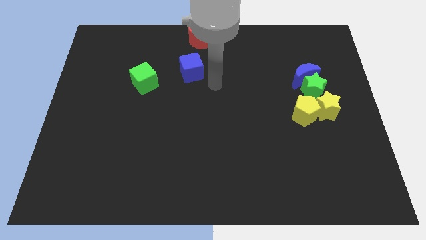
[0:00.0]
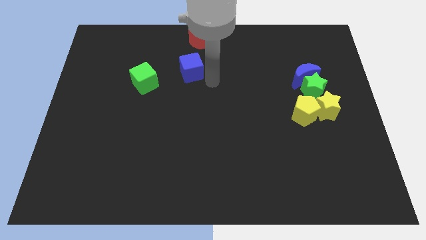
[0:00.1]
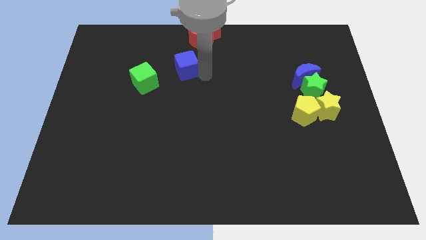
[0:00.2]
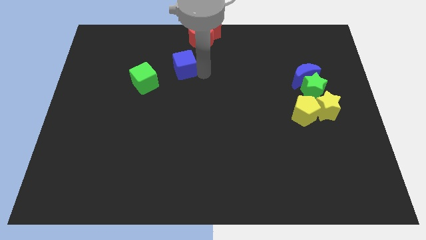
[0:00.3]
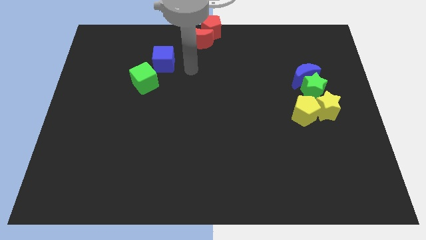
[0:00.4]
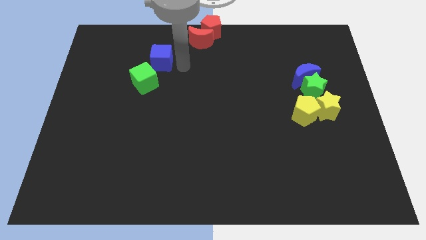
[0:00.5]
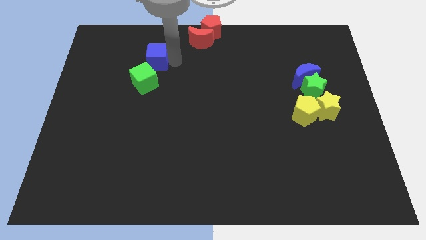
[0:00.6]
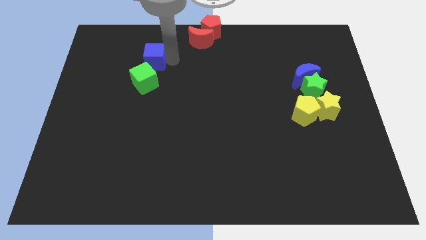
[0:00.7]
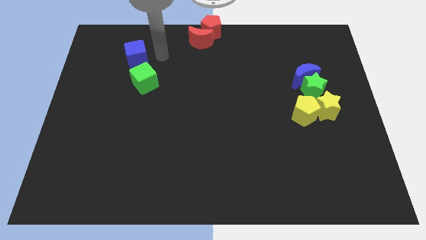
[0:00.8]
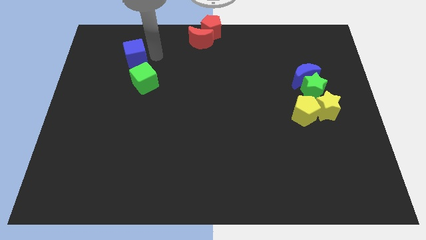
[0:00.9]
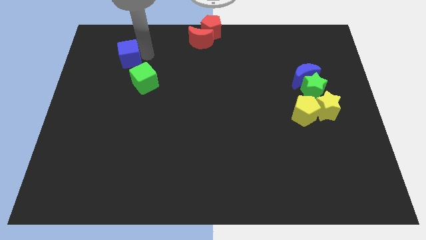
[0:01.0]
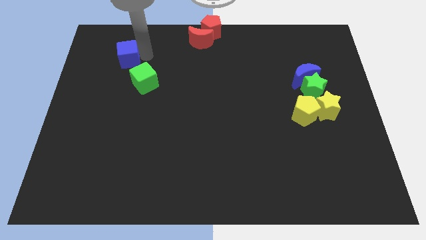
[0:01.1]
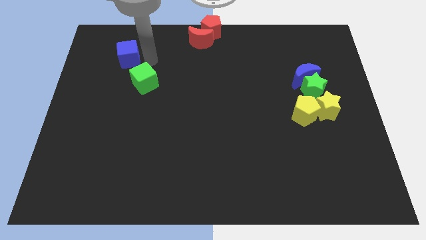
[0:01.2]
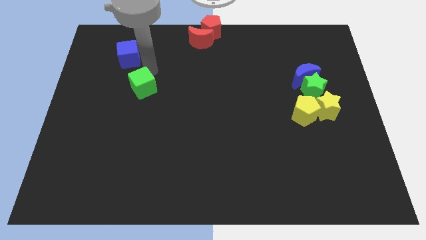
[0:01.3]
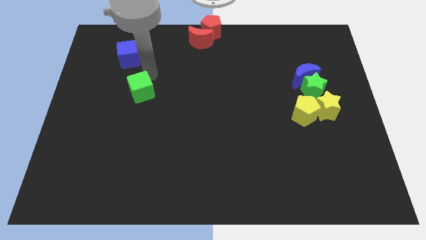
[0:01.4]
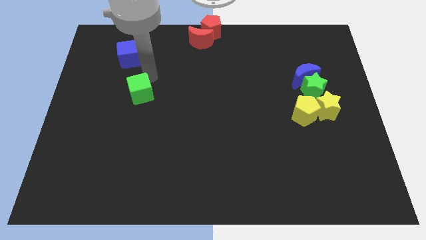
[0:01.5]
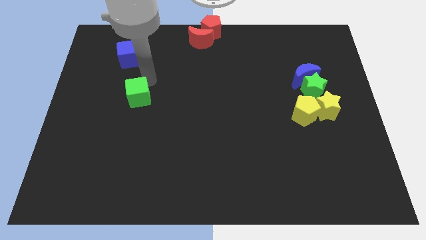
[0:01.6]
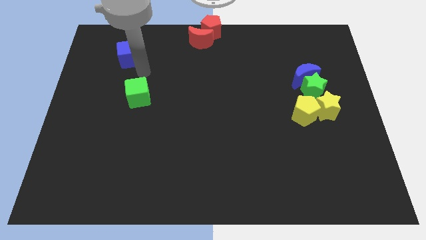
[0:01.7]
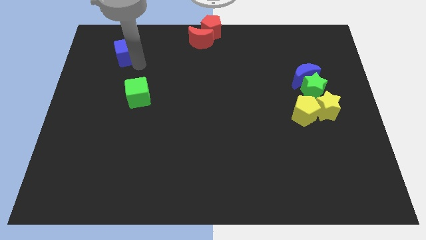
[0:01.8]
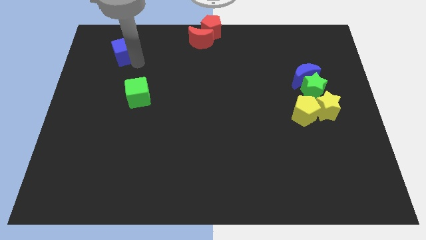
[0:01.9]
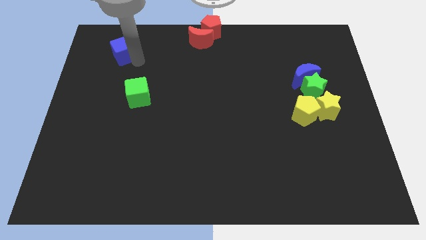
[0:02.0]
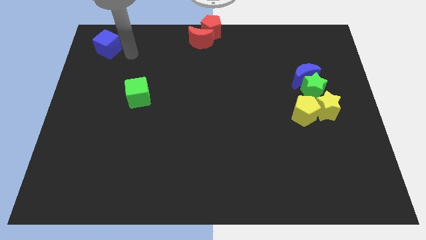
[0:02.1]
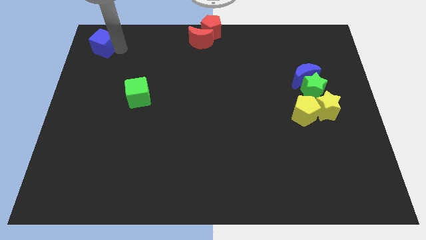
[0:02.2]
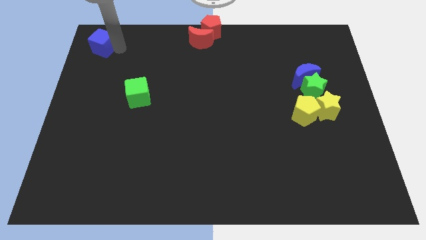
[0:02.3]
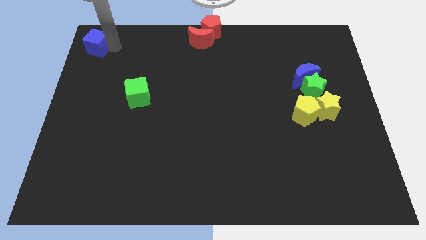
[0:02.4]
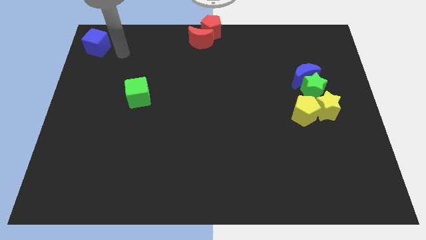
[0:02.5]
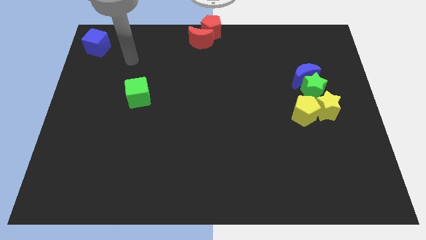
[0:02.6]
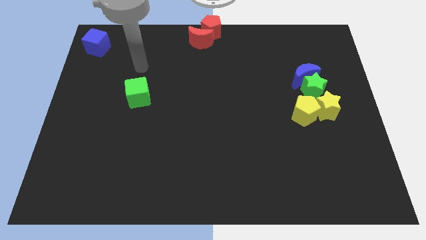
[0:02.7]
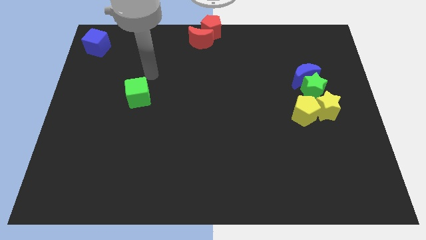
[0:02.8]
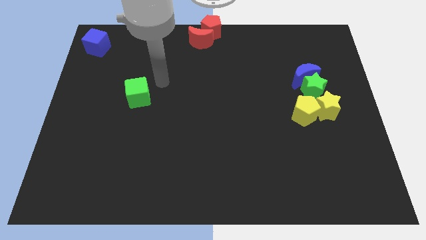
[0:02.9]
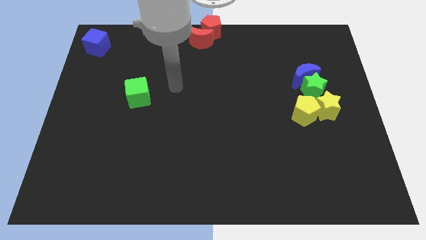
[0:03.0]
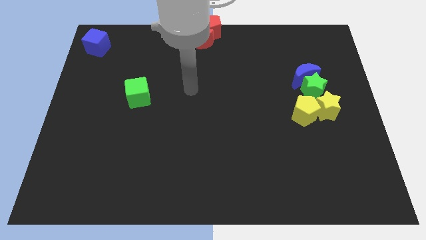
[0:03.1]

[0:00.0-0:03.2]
push blue cube to the top left corner of the board

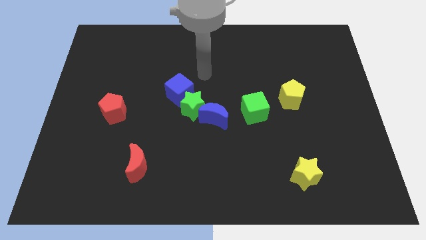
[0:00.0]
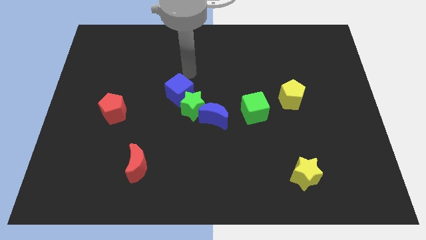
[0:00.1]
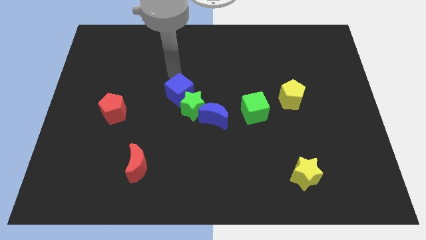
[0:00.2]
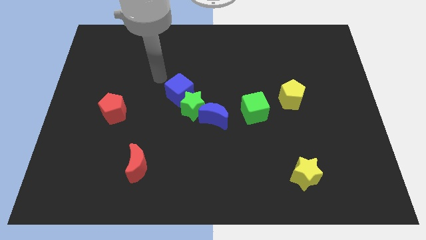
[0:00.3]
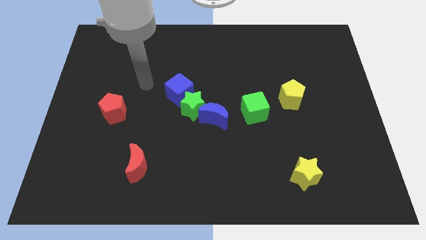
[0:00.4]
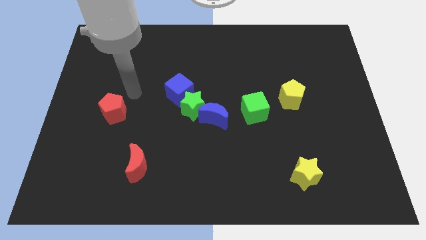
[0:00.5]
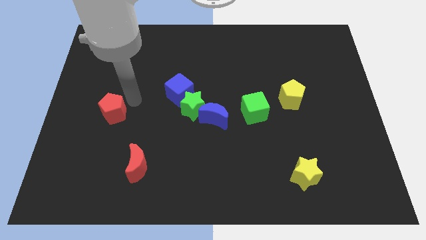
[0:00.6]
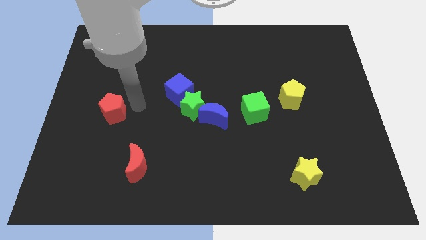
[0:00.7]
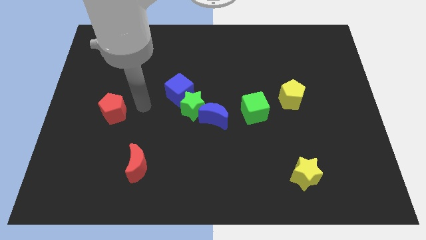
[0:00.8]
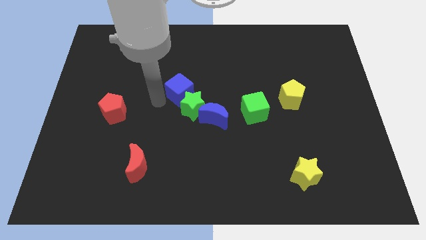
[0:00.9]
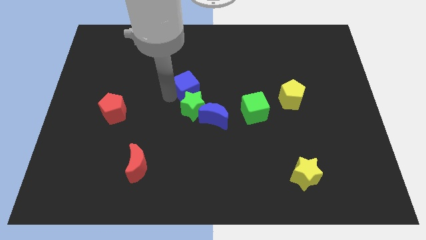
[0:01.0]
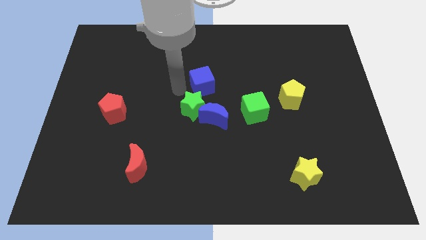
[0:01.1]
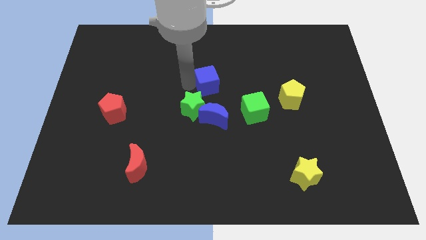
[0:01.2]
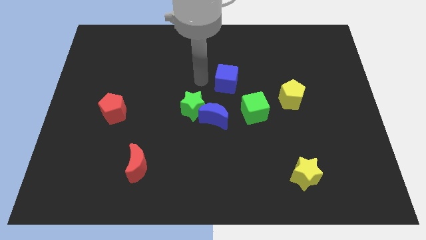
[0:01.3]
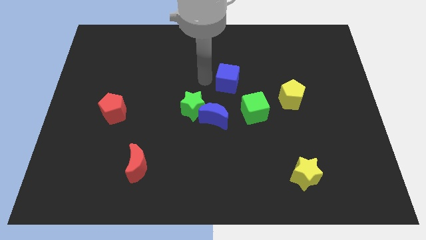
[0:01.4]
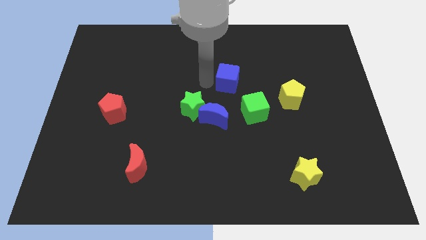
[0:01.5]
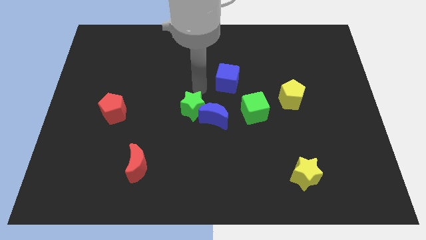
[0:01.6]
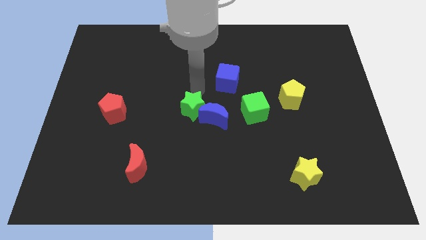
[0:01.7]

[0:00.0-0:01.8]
drag the blue cube diagonally top right to the blue moon

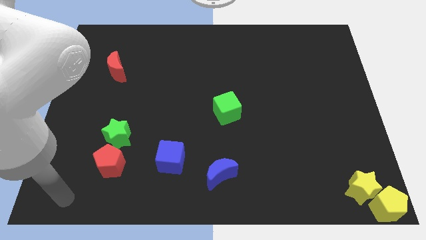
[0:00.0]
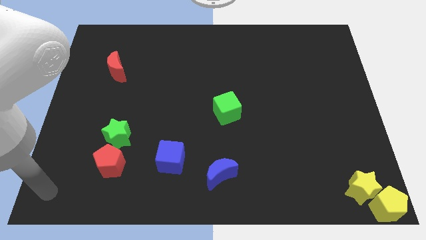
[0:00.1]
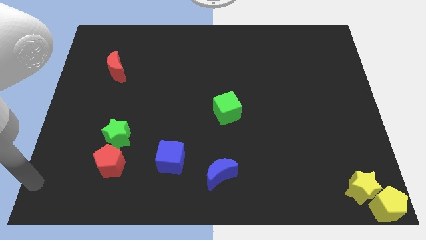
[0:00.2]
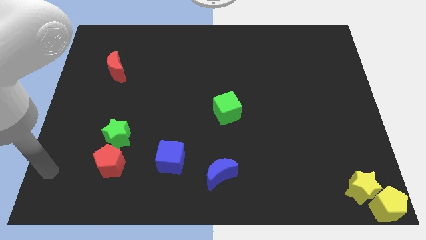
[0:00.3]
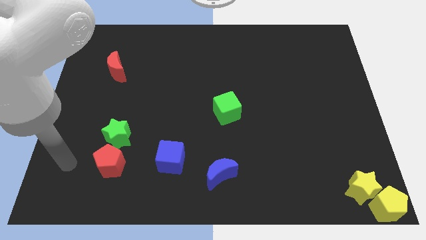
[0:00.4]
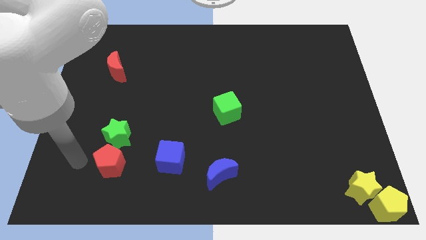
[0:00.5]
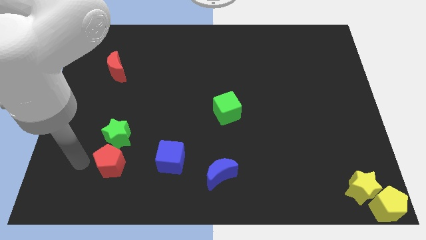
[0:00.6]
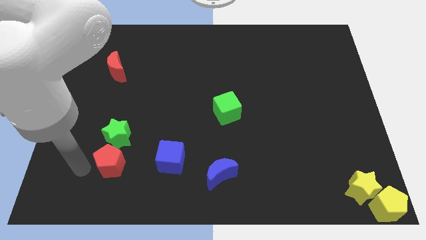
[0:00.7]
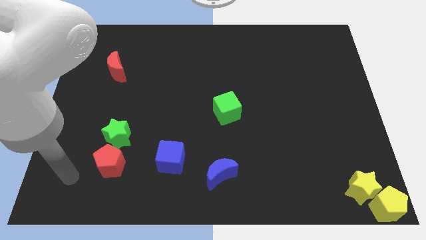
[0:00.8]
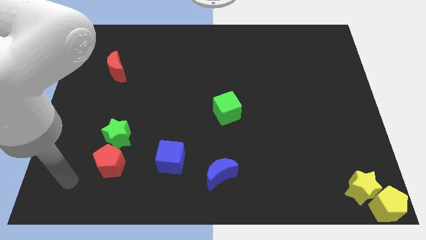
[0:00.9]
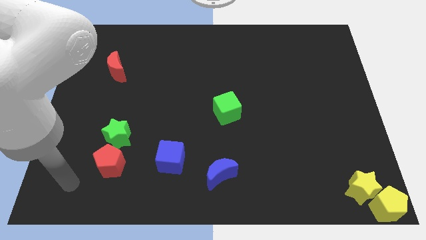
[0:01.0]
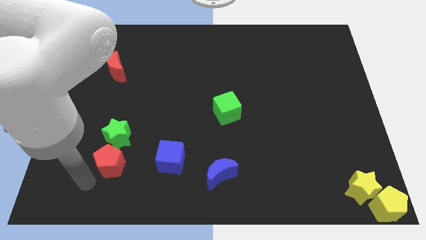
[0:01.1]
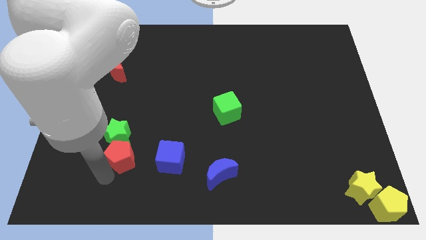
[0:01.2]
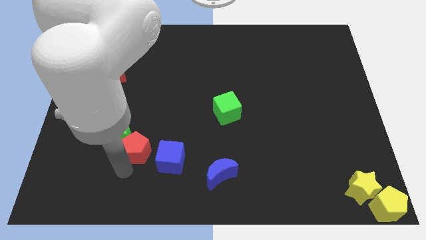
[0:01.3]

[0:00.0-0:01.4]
put the red pentagon in between the blue moon and green star

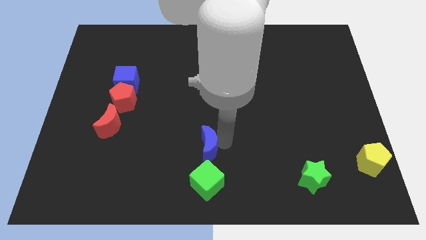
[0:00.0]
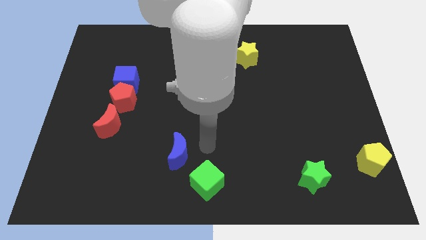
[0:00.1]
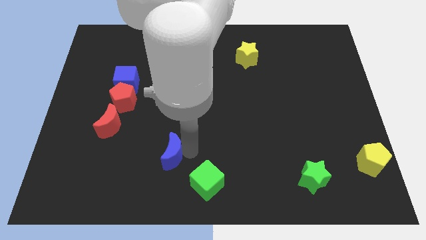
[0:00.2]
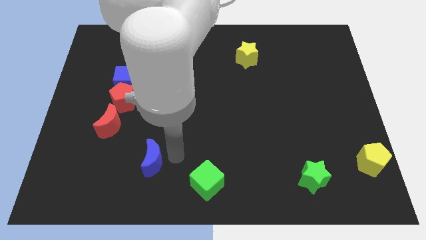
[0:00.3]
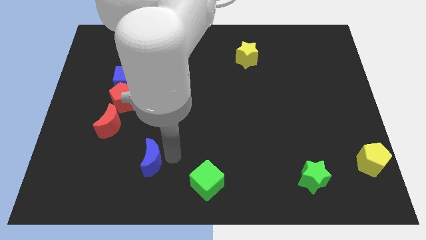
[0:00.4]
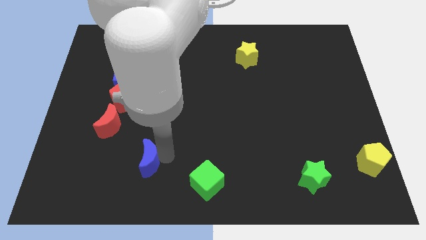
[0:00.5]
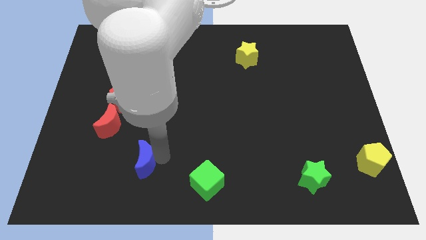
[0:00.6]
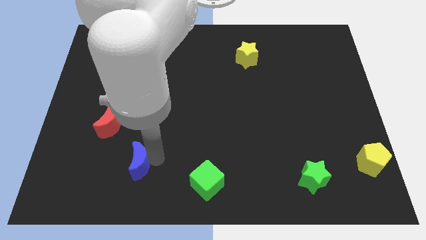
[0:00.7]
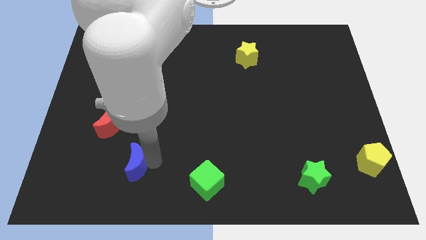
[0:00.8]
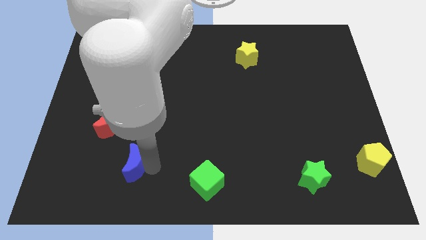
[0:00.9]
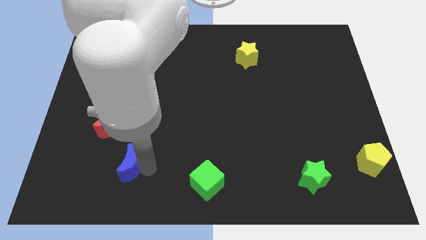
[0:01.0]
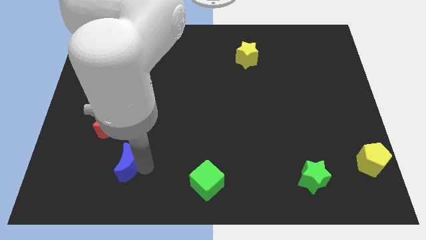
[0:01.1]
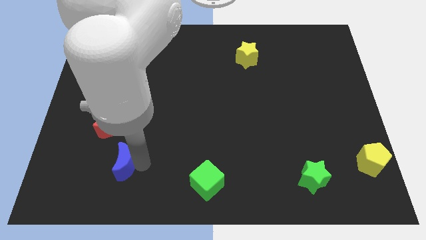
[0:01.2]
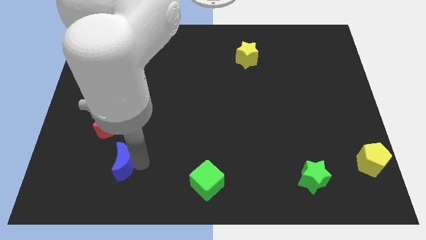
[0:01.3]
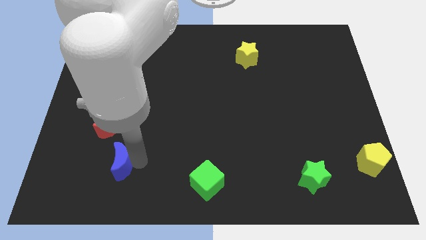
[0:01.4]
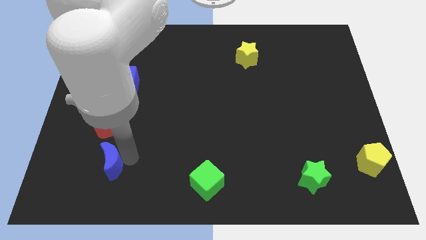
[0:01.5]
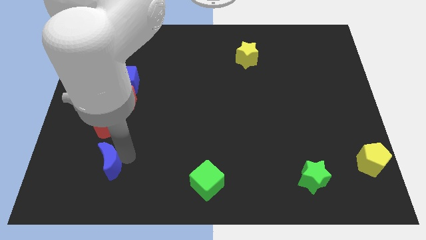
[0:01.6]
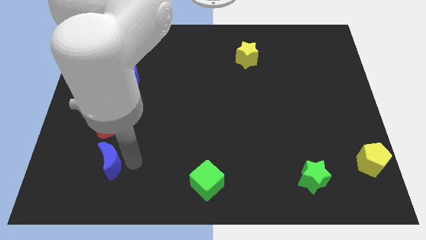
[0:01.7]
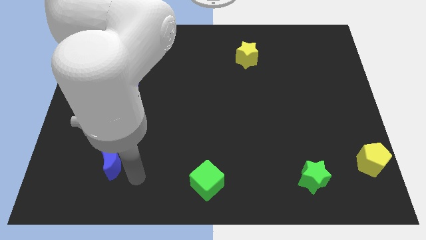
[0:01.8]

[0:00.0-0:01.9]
move the blue moon away from the green cube

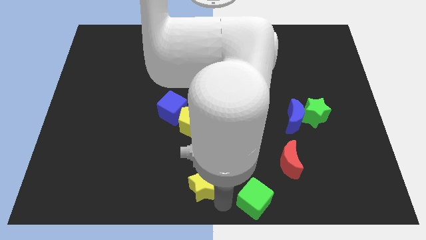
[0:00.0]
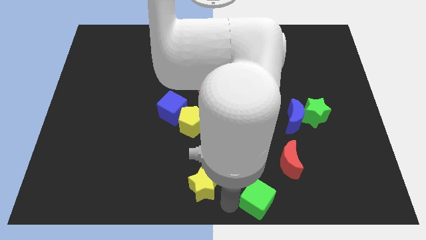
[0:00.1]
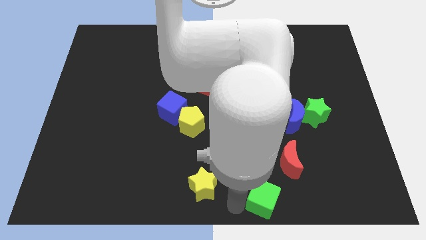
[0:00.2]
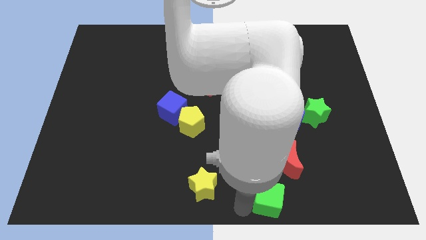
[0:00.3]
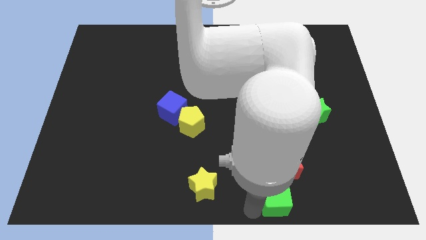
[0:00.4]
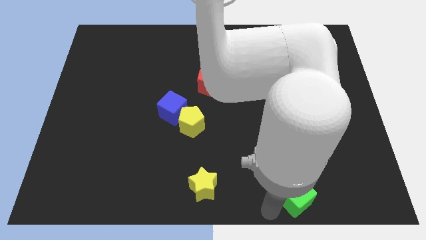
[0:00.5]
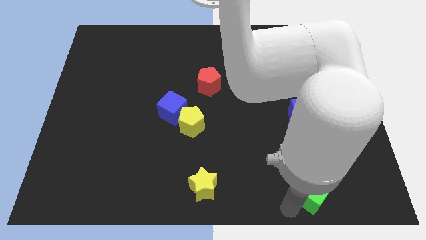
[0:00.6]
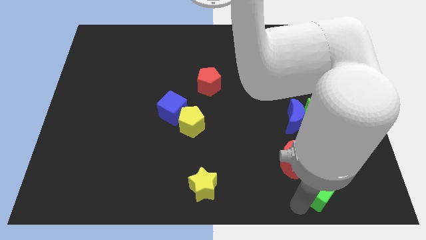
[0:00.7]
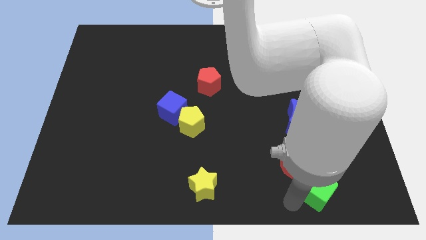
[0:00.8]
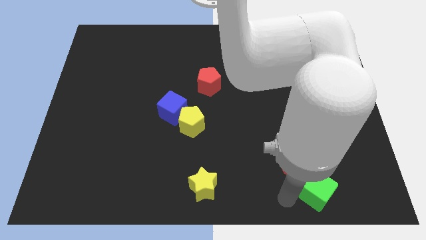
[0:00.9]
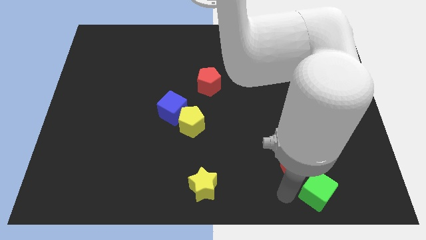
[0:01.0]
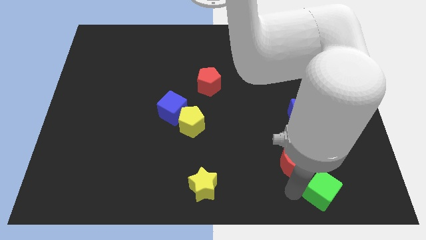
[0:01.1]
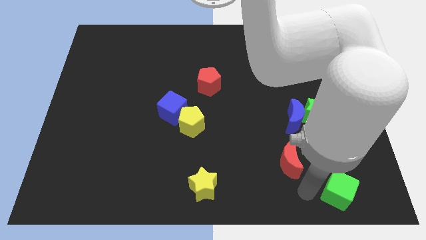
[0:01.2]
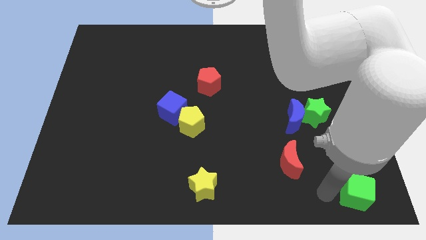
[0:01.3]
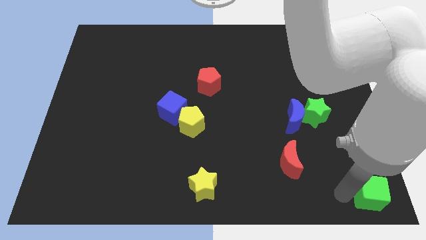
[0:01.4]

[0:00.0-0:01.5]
slide the green cube slightly towards right
